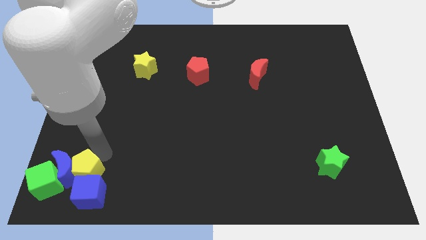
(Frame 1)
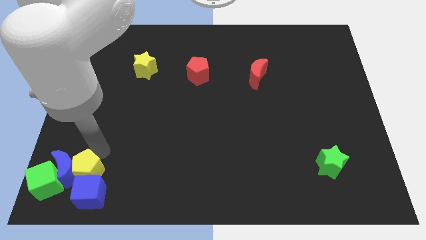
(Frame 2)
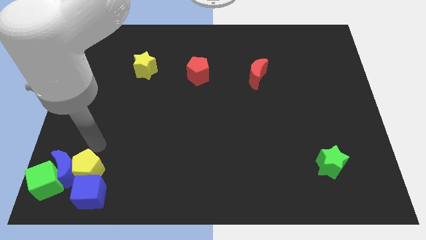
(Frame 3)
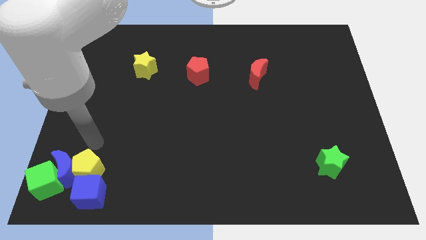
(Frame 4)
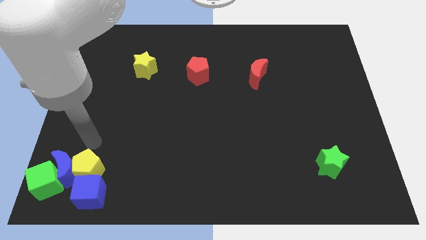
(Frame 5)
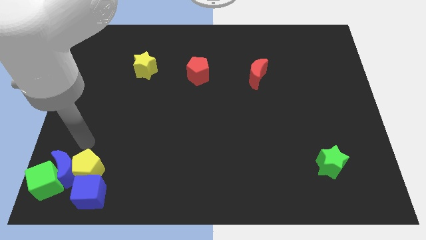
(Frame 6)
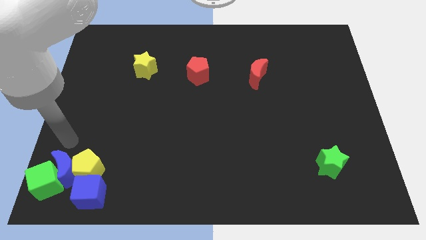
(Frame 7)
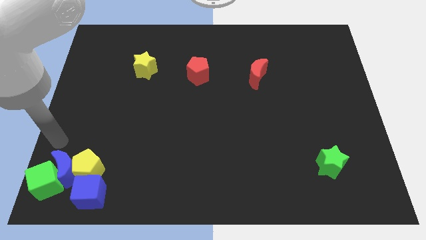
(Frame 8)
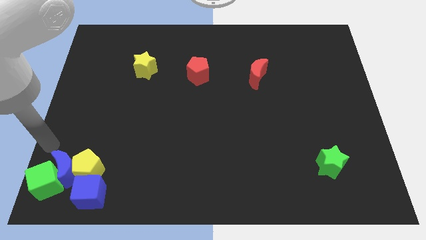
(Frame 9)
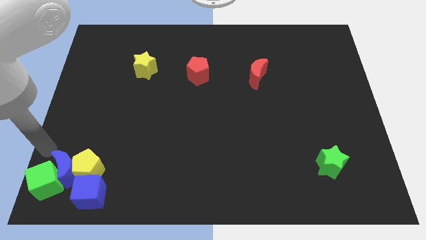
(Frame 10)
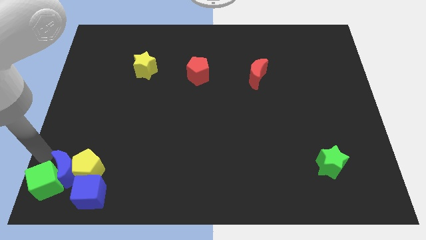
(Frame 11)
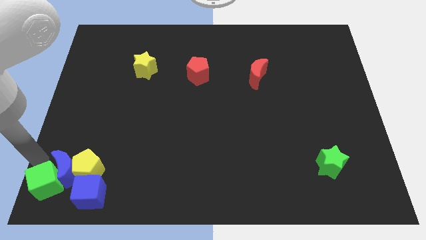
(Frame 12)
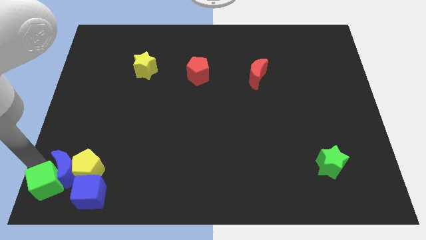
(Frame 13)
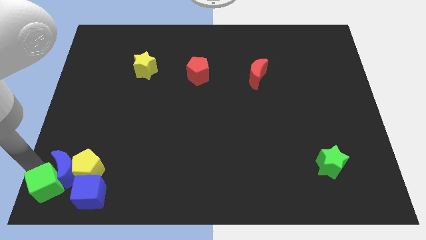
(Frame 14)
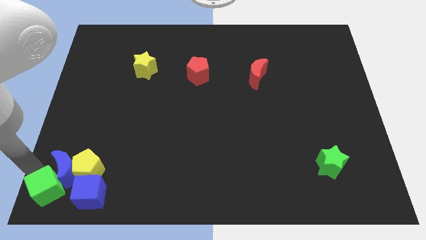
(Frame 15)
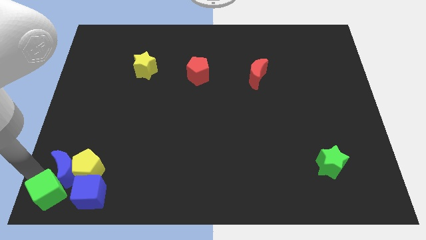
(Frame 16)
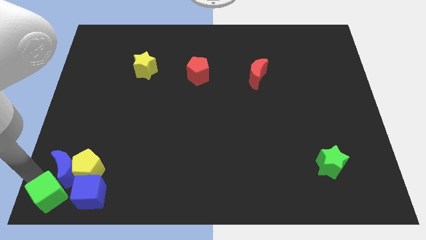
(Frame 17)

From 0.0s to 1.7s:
push the green cube slightly close to the blue cube

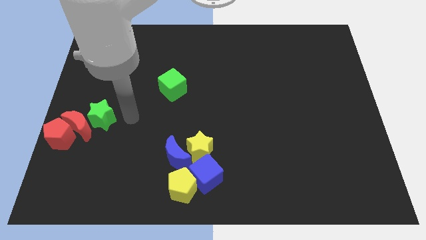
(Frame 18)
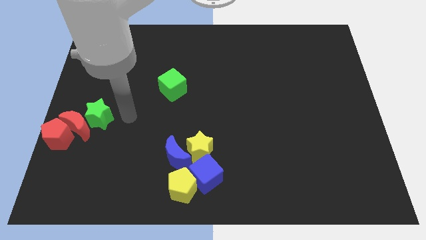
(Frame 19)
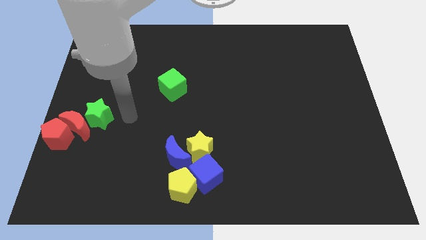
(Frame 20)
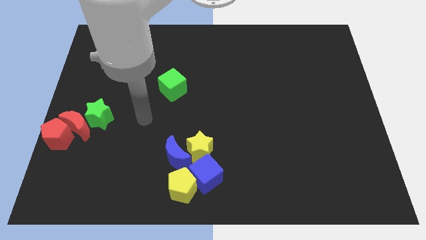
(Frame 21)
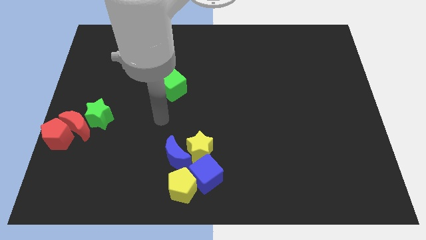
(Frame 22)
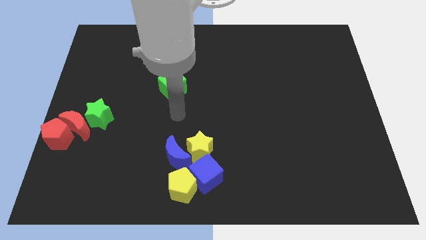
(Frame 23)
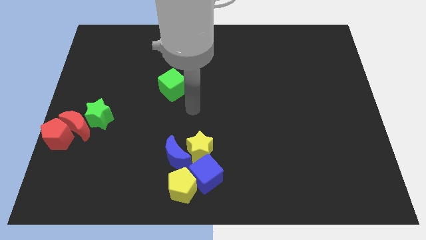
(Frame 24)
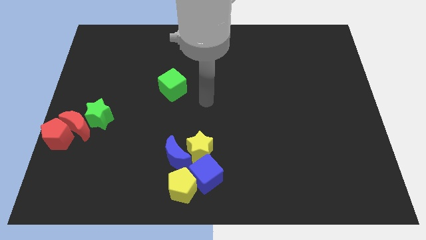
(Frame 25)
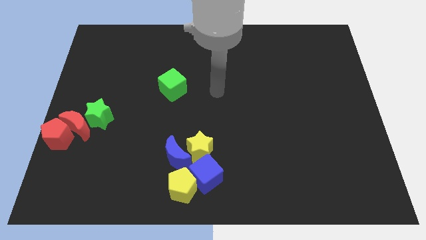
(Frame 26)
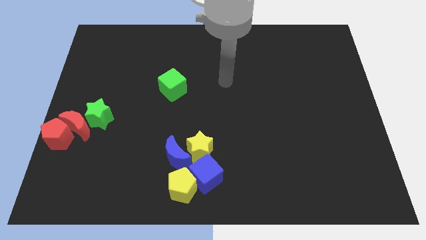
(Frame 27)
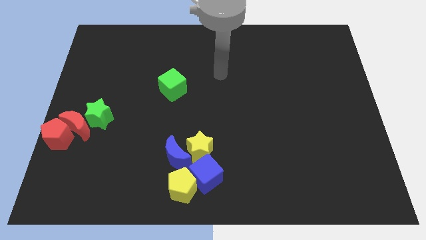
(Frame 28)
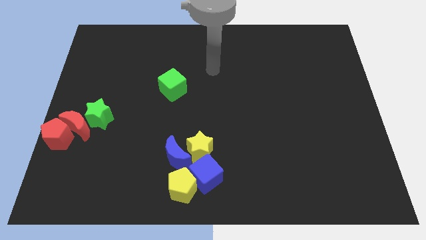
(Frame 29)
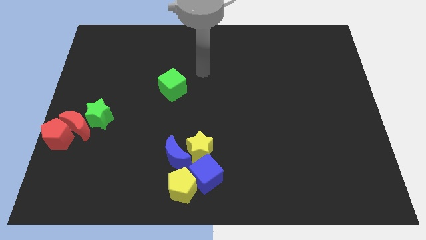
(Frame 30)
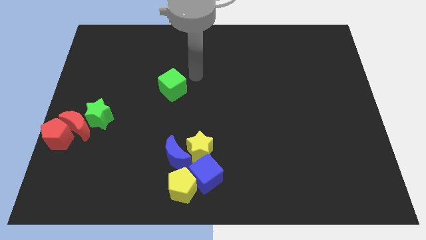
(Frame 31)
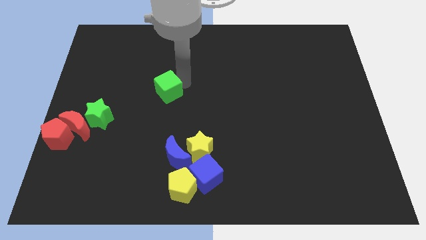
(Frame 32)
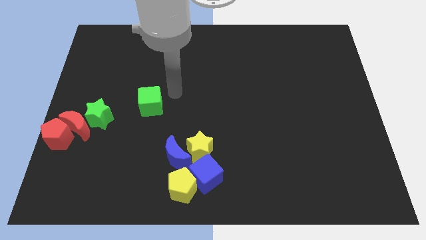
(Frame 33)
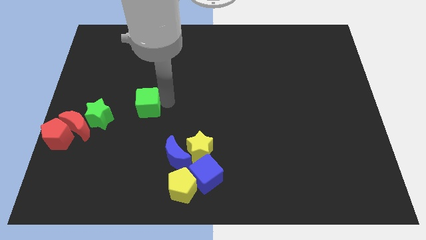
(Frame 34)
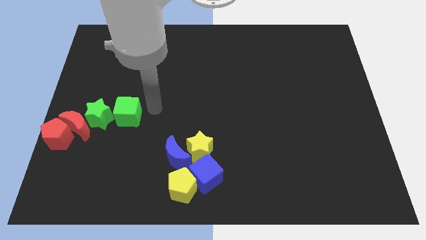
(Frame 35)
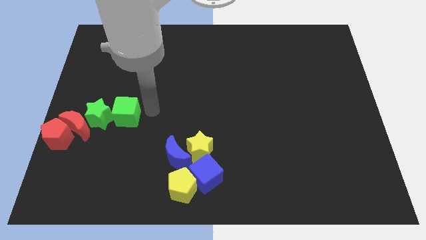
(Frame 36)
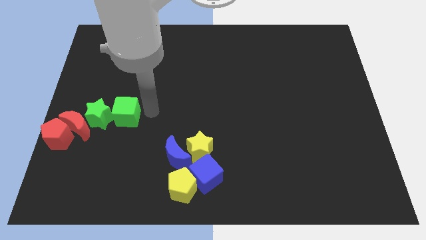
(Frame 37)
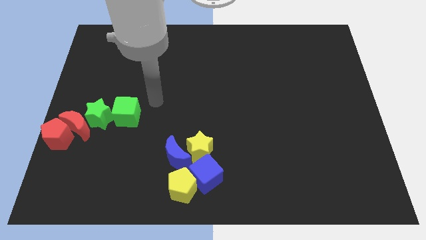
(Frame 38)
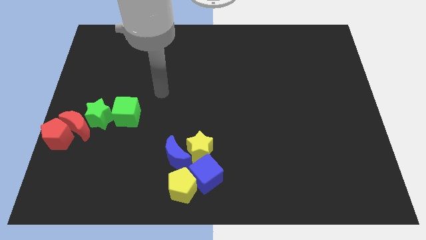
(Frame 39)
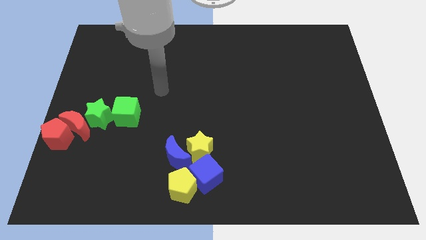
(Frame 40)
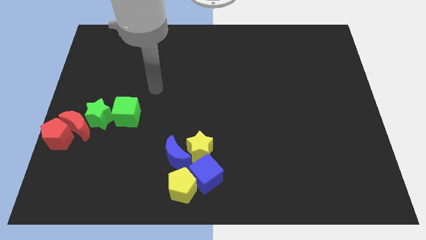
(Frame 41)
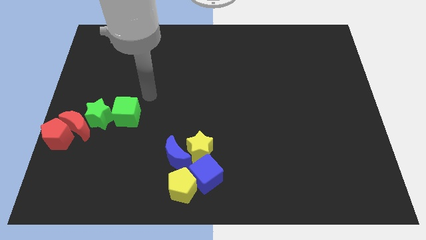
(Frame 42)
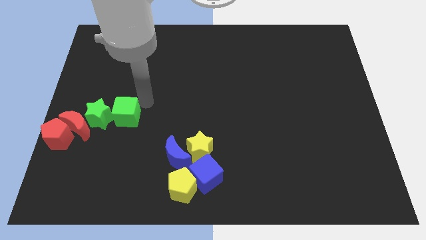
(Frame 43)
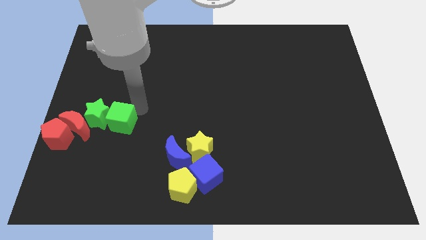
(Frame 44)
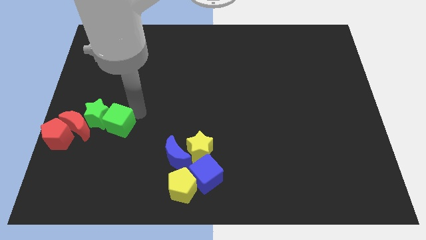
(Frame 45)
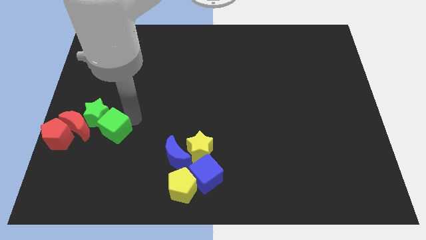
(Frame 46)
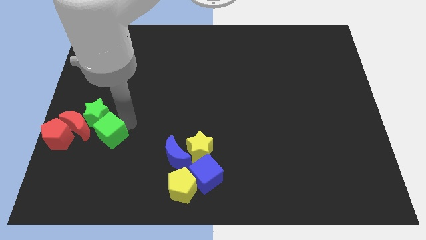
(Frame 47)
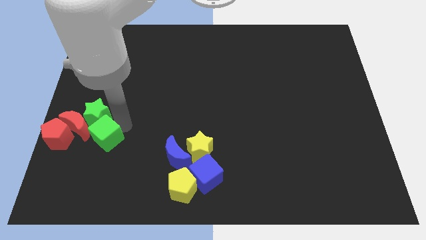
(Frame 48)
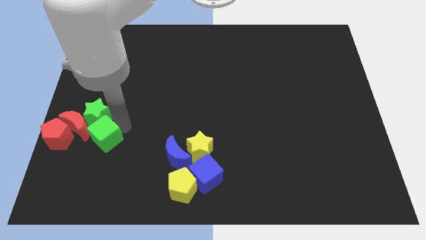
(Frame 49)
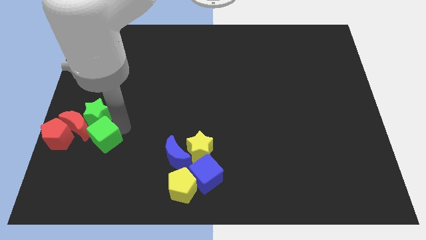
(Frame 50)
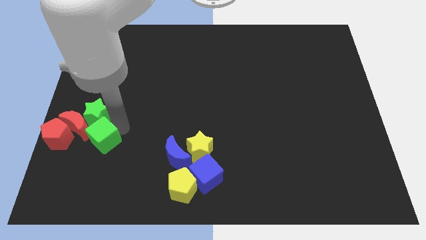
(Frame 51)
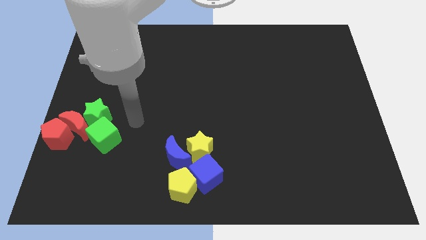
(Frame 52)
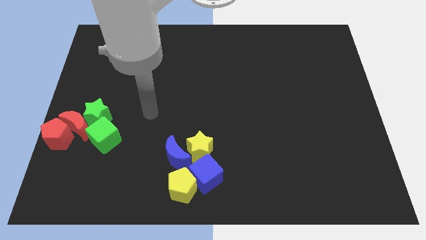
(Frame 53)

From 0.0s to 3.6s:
move the green cube to the bottom of the green star

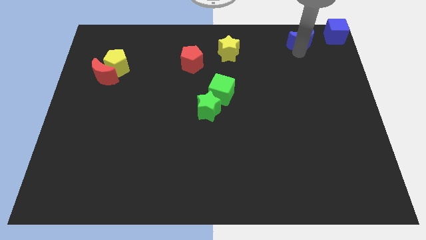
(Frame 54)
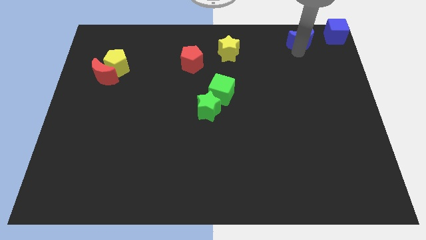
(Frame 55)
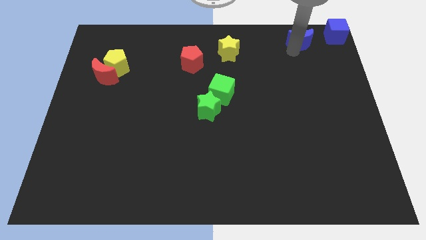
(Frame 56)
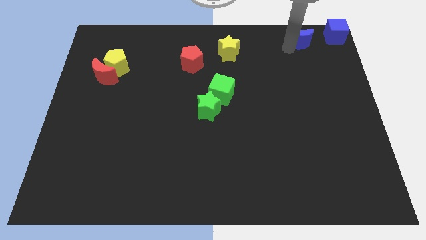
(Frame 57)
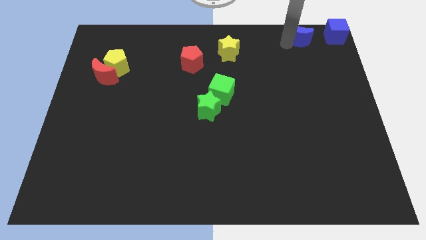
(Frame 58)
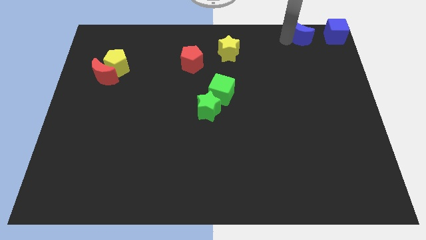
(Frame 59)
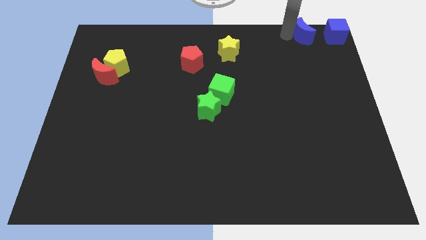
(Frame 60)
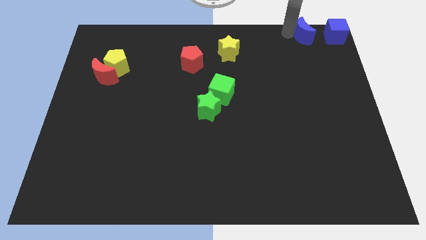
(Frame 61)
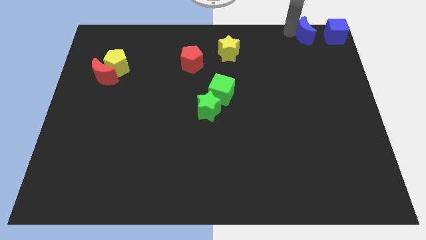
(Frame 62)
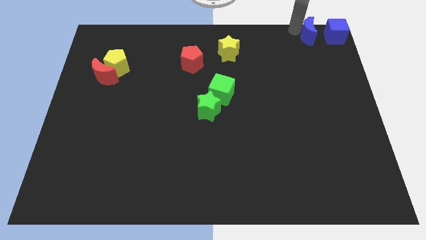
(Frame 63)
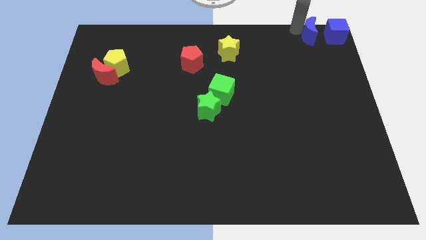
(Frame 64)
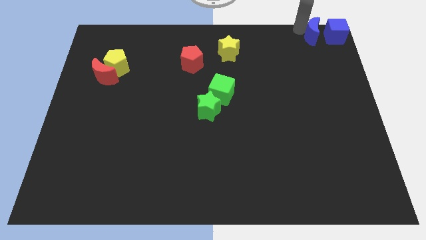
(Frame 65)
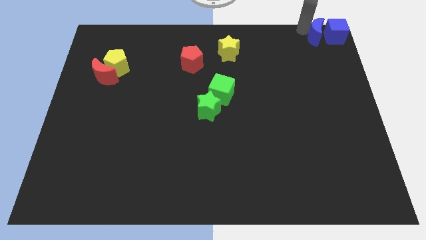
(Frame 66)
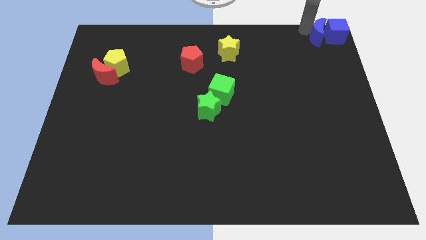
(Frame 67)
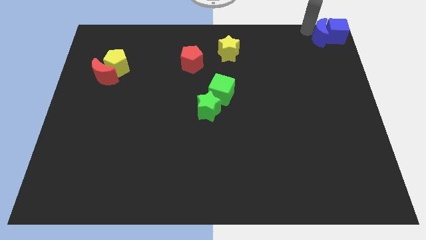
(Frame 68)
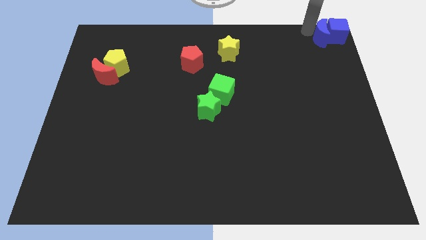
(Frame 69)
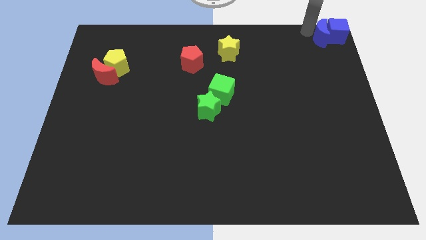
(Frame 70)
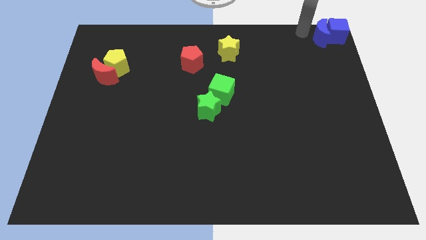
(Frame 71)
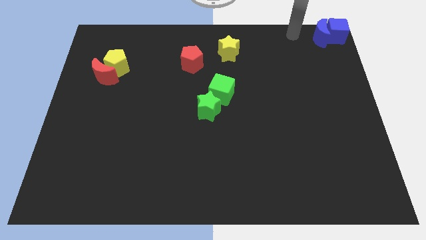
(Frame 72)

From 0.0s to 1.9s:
move the blue crescent to the left of the blue cube

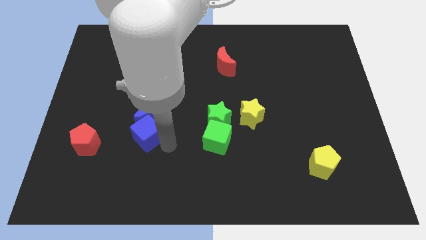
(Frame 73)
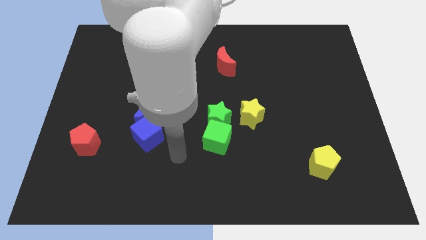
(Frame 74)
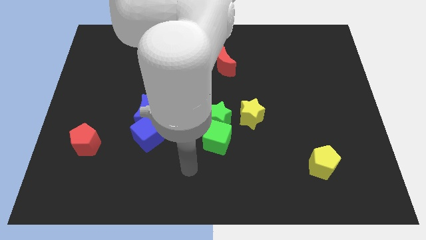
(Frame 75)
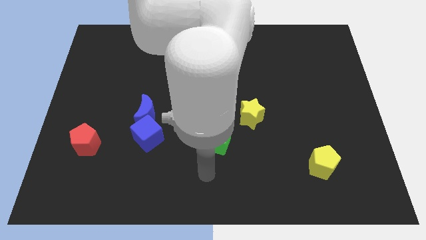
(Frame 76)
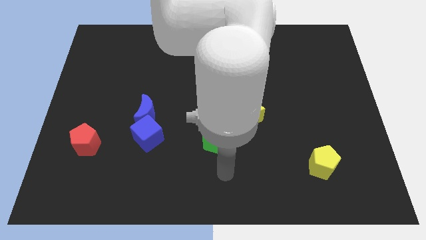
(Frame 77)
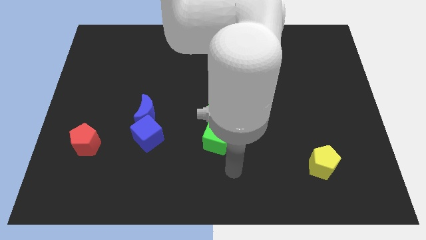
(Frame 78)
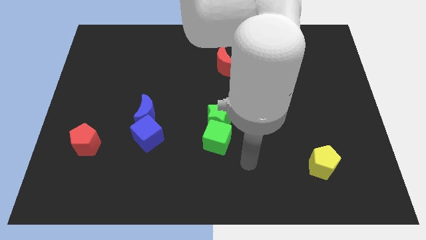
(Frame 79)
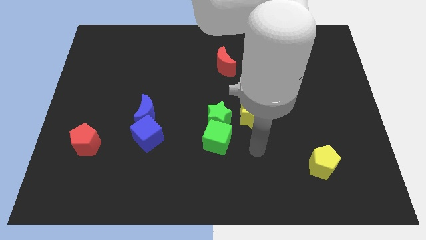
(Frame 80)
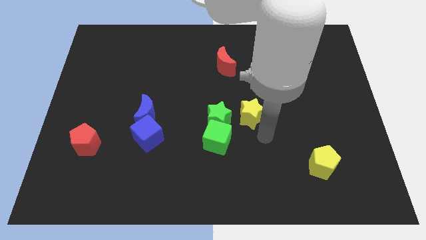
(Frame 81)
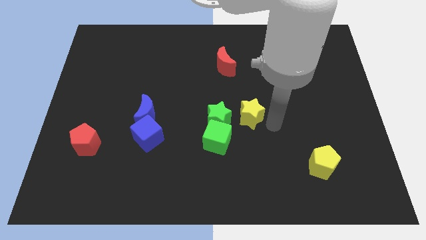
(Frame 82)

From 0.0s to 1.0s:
move the arm away from the blue cube

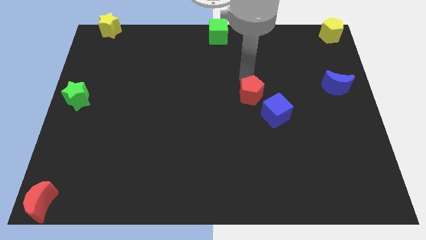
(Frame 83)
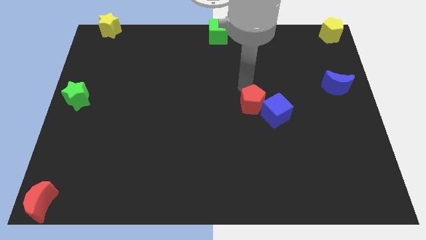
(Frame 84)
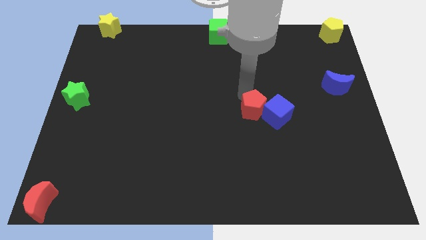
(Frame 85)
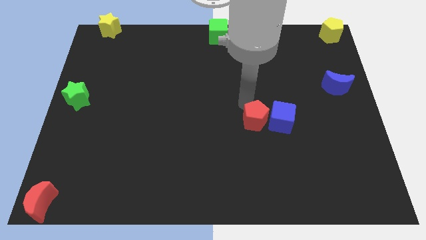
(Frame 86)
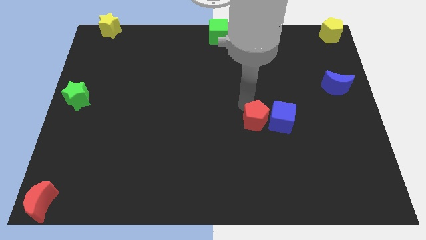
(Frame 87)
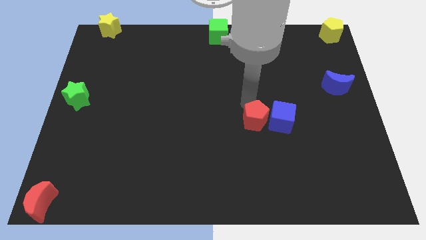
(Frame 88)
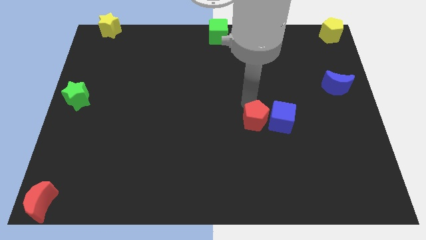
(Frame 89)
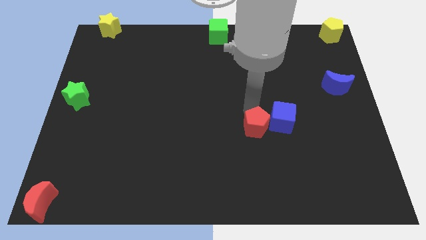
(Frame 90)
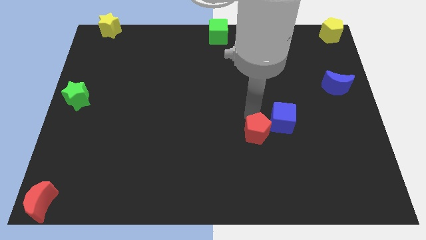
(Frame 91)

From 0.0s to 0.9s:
push the red pentagon into the blue cube
